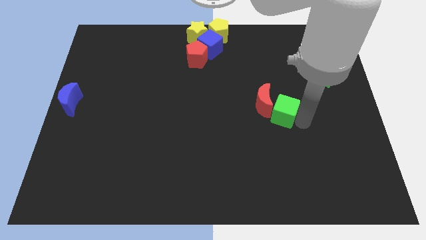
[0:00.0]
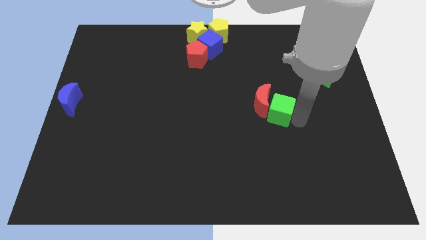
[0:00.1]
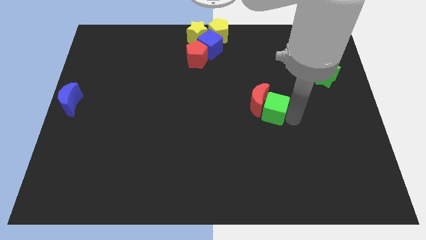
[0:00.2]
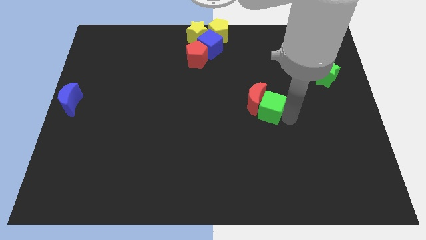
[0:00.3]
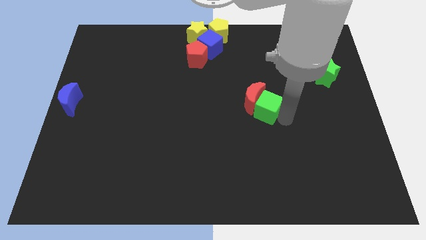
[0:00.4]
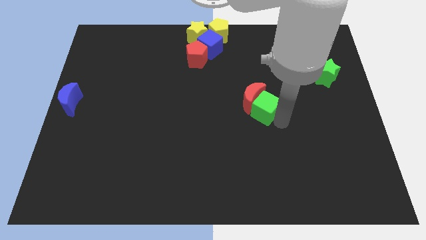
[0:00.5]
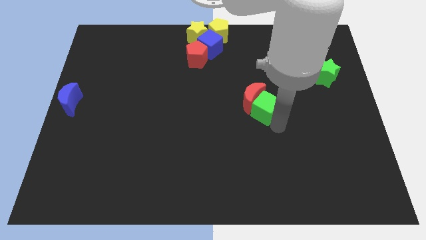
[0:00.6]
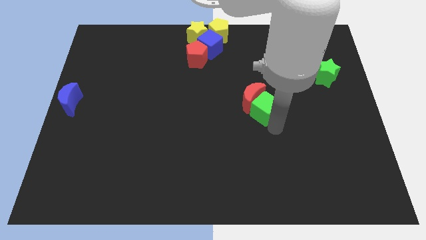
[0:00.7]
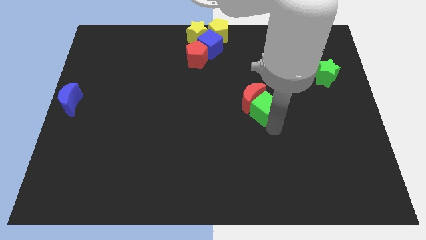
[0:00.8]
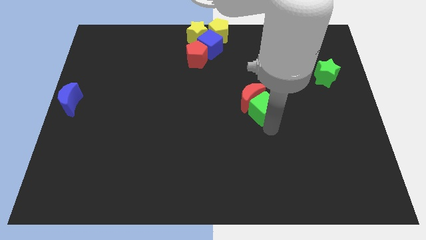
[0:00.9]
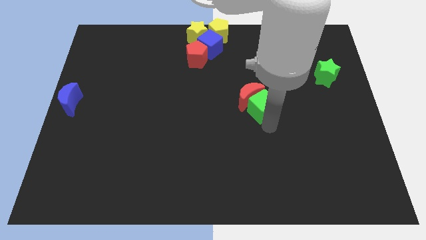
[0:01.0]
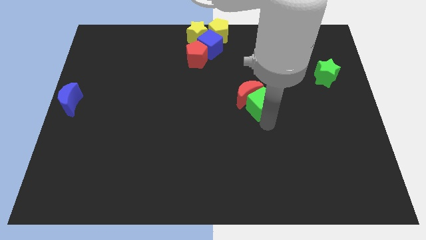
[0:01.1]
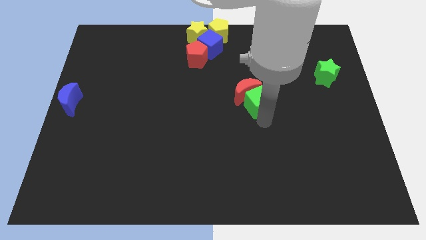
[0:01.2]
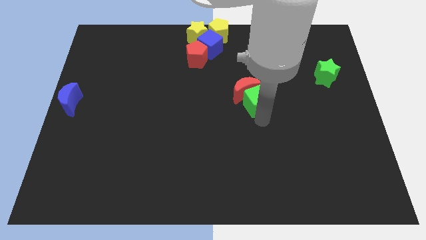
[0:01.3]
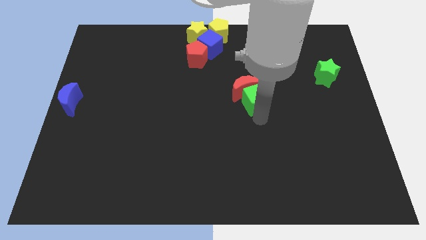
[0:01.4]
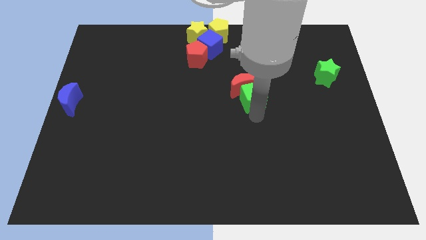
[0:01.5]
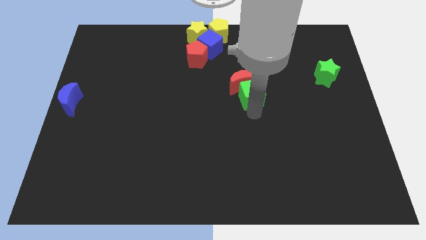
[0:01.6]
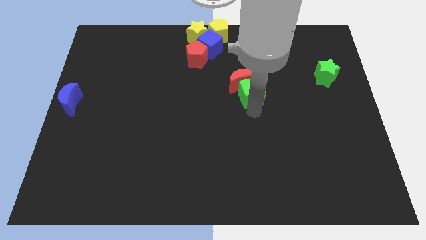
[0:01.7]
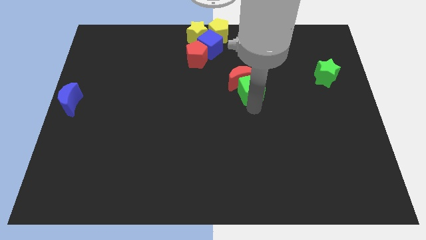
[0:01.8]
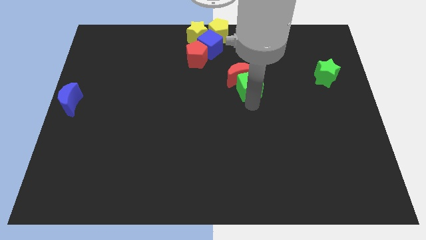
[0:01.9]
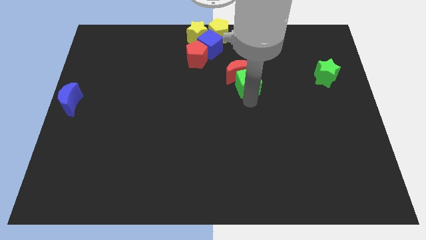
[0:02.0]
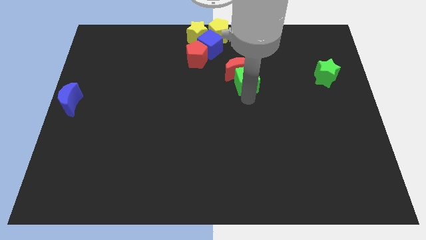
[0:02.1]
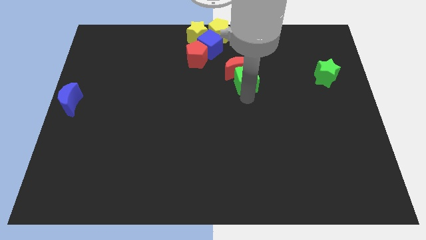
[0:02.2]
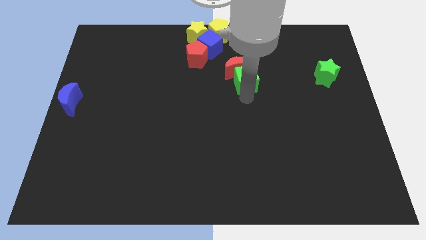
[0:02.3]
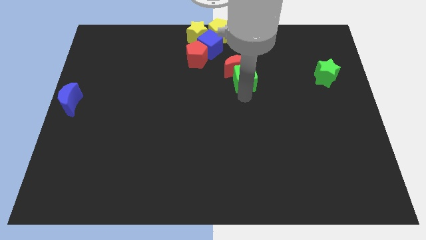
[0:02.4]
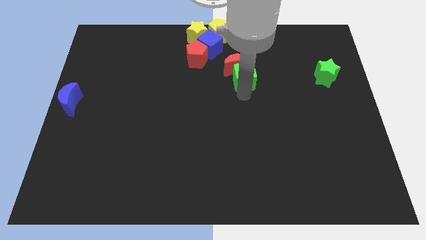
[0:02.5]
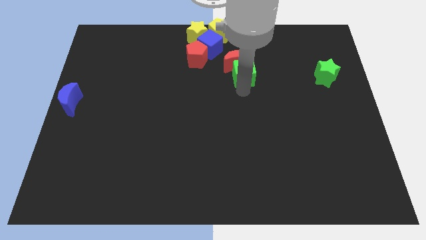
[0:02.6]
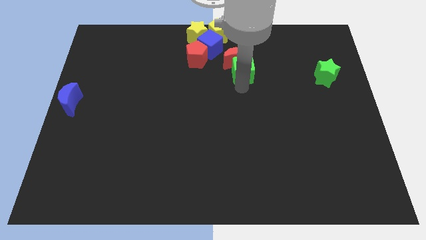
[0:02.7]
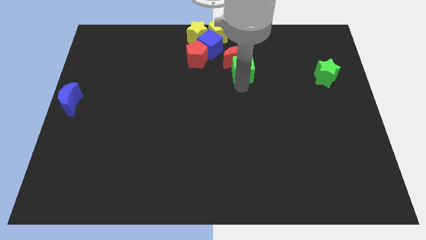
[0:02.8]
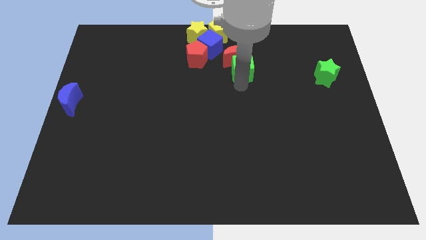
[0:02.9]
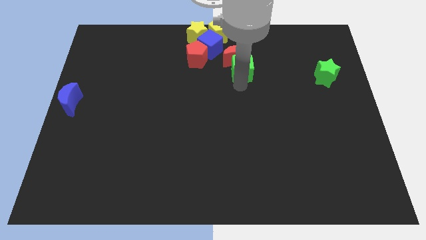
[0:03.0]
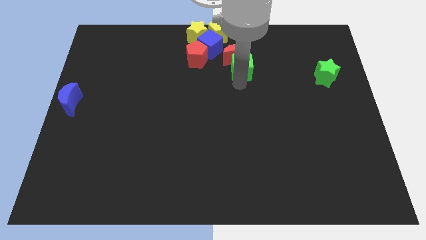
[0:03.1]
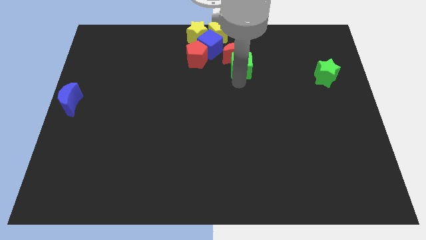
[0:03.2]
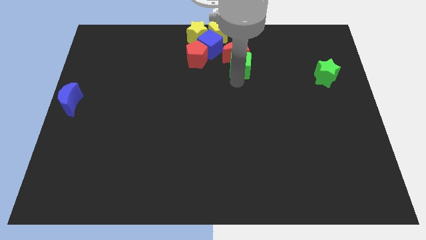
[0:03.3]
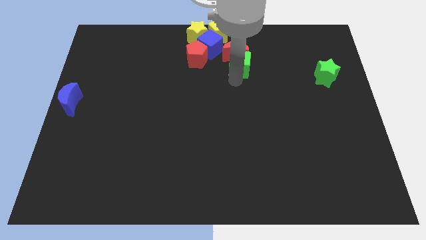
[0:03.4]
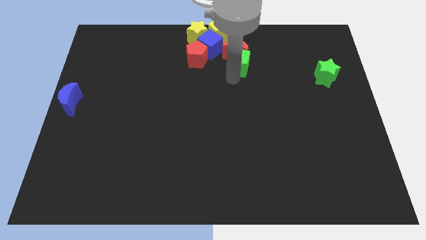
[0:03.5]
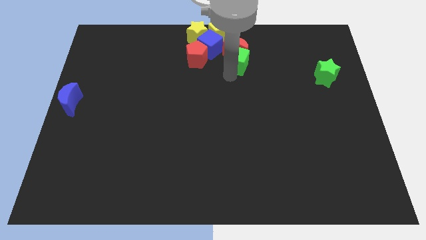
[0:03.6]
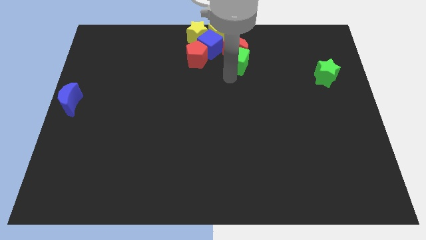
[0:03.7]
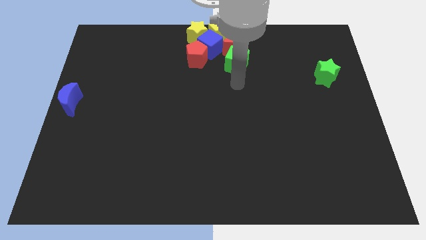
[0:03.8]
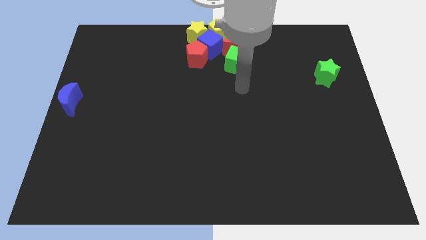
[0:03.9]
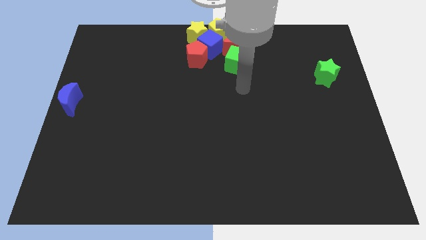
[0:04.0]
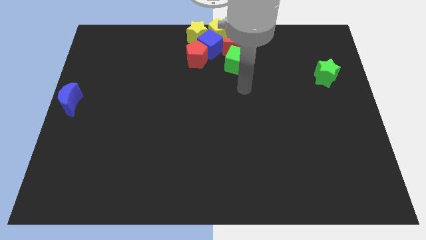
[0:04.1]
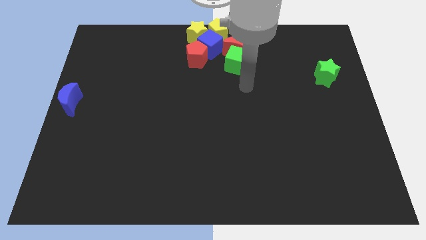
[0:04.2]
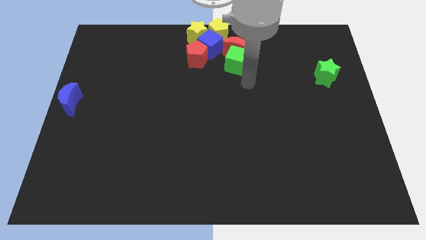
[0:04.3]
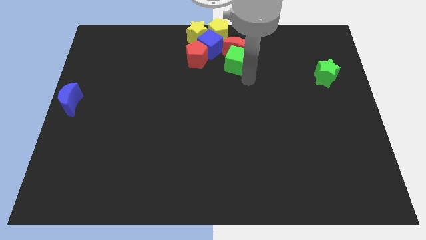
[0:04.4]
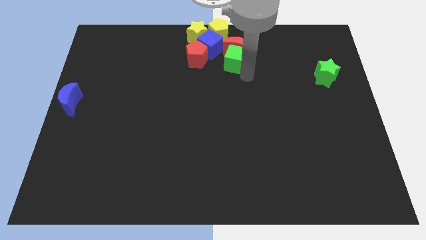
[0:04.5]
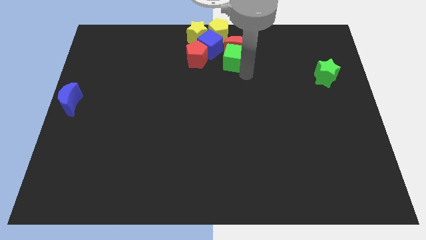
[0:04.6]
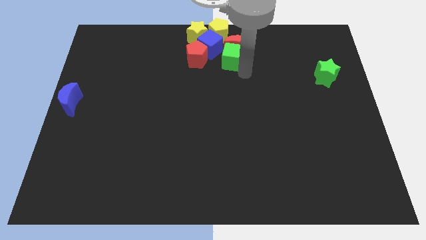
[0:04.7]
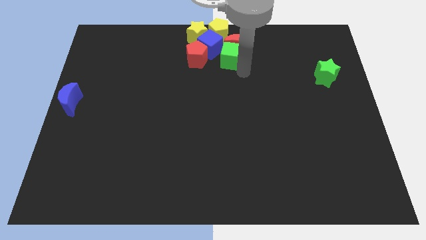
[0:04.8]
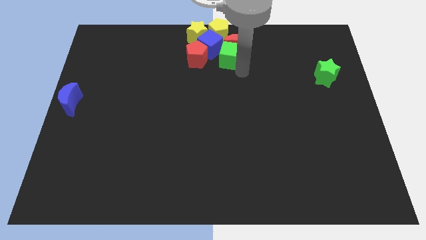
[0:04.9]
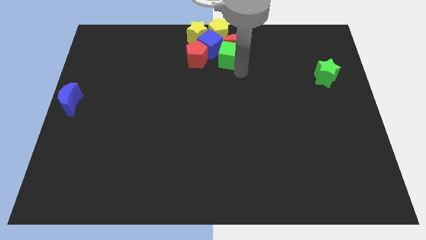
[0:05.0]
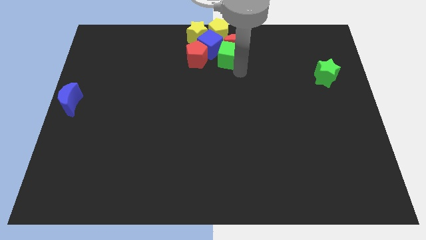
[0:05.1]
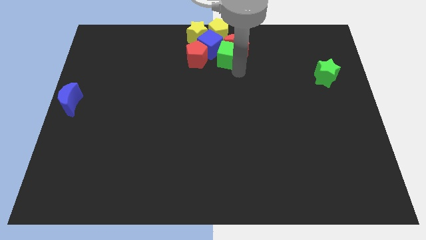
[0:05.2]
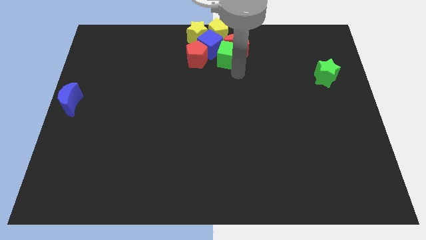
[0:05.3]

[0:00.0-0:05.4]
push the red crescent with the green cube towards the top center of the board

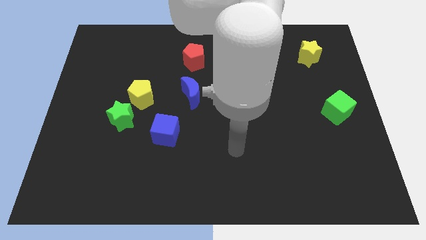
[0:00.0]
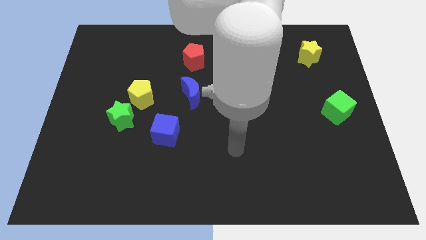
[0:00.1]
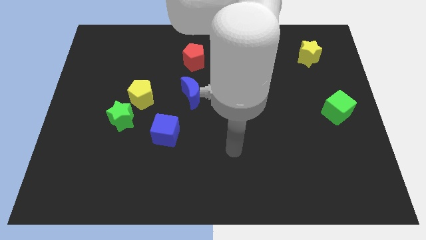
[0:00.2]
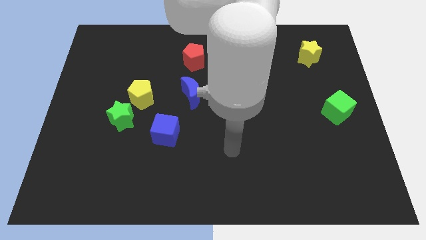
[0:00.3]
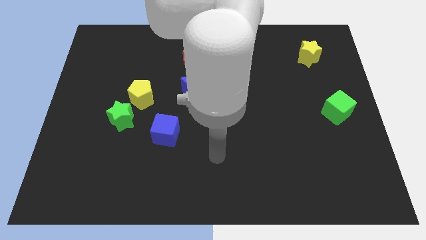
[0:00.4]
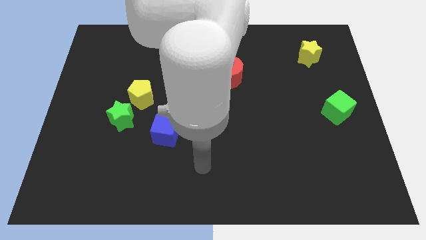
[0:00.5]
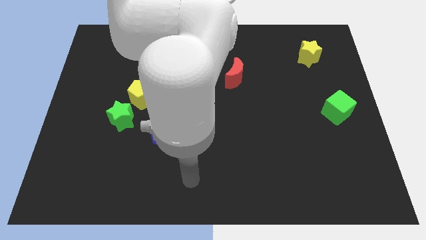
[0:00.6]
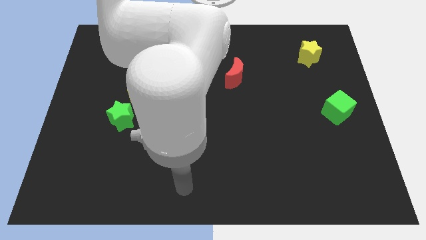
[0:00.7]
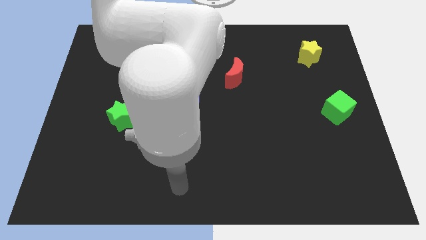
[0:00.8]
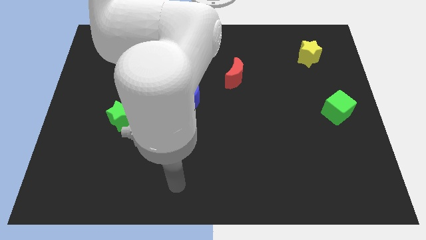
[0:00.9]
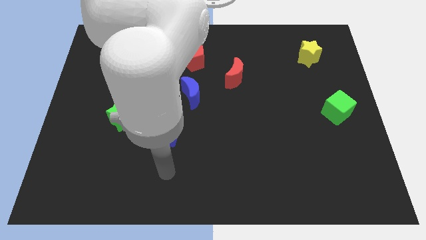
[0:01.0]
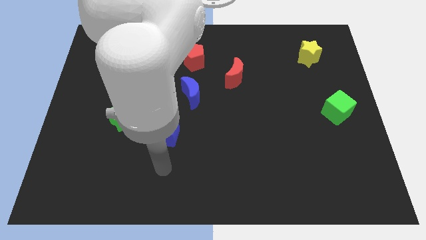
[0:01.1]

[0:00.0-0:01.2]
place your hand under the blue cube

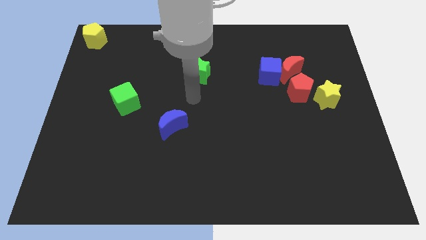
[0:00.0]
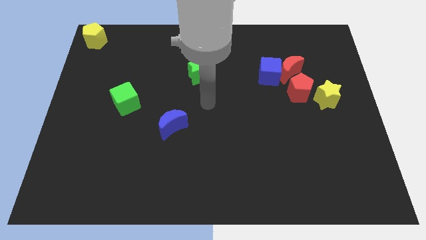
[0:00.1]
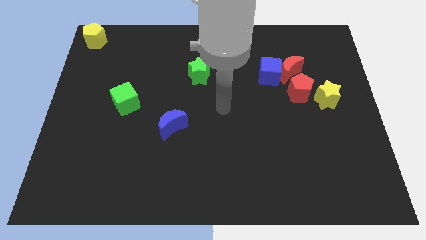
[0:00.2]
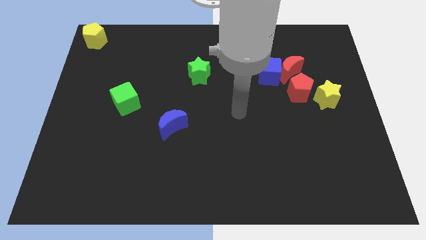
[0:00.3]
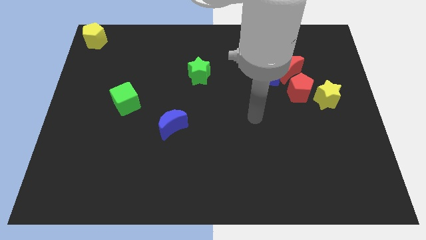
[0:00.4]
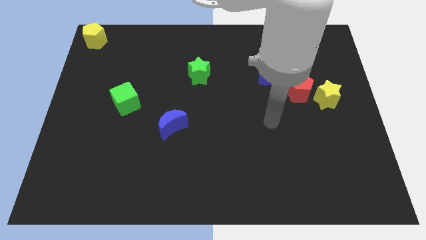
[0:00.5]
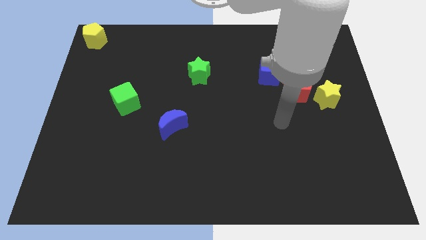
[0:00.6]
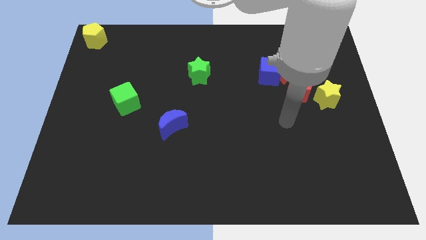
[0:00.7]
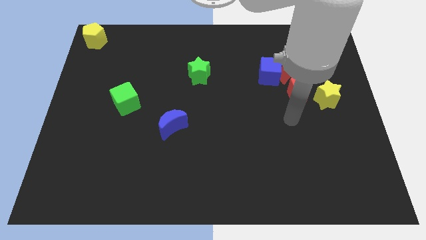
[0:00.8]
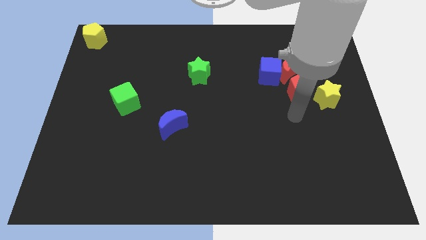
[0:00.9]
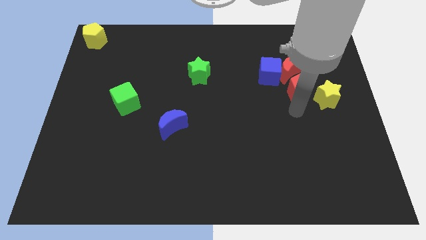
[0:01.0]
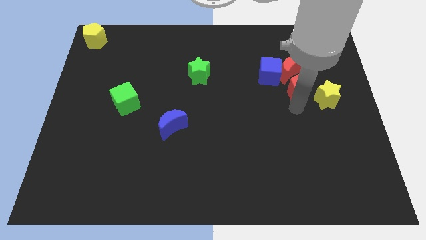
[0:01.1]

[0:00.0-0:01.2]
move your hand to the bottom of the red pentagon

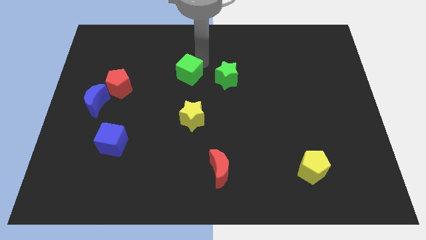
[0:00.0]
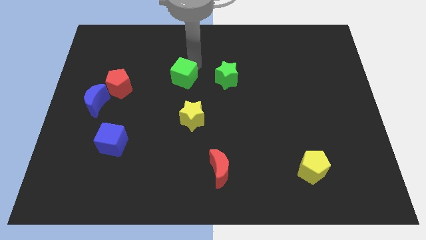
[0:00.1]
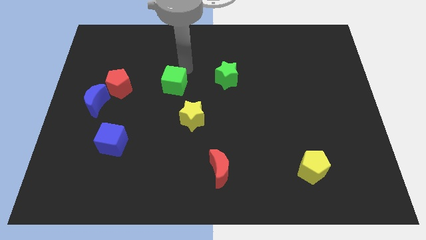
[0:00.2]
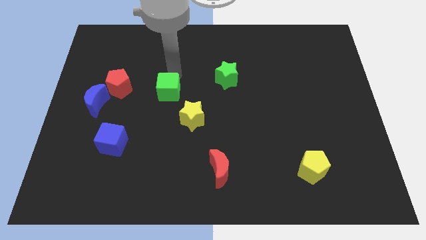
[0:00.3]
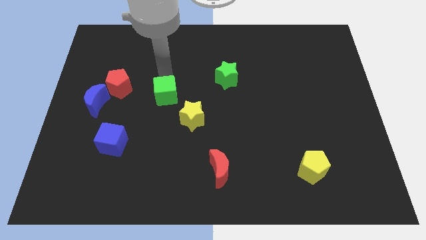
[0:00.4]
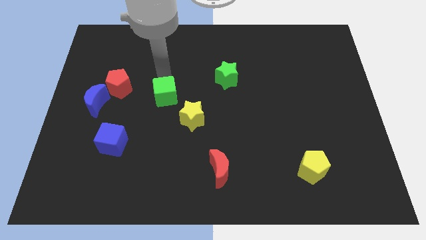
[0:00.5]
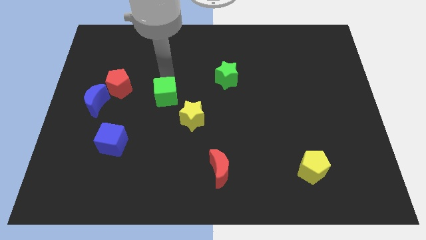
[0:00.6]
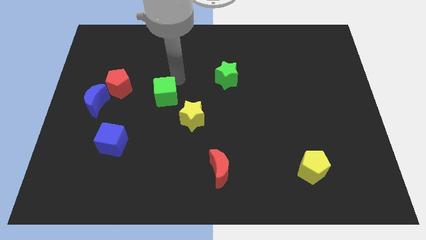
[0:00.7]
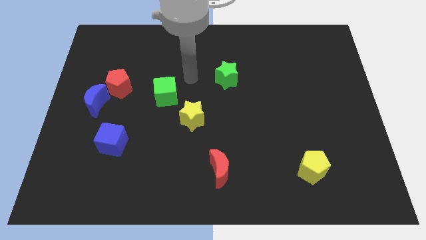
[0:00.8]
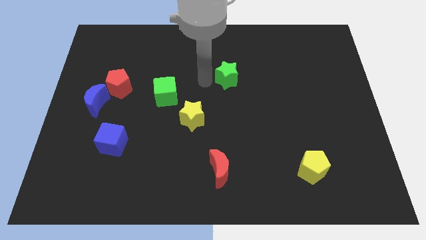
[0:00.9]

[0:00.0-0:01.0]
push green cube downwards

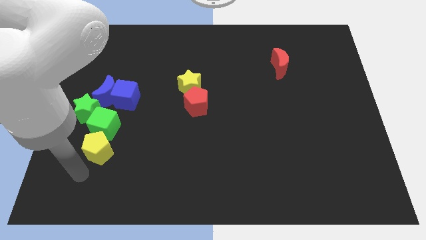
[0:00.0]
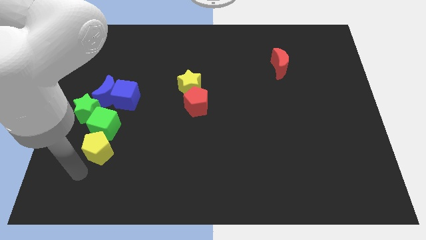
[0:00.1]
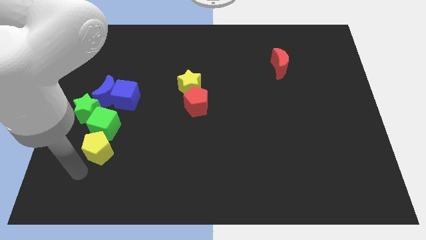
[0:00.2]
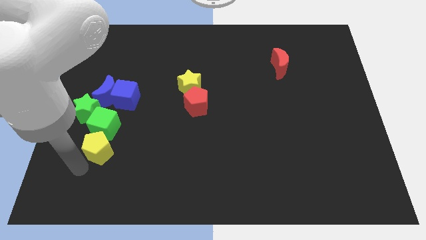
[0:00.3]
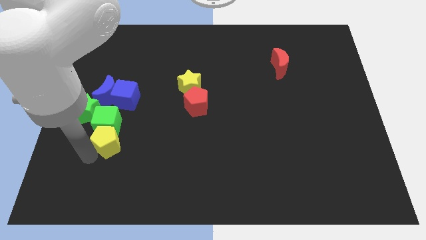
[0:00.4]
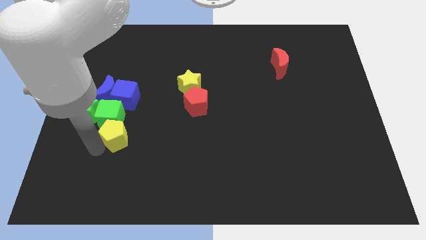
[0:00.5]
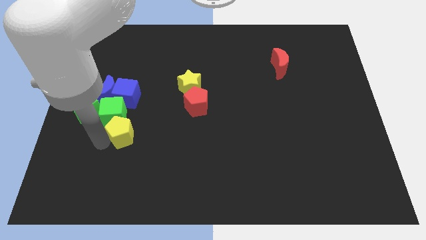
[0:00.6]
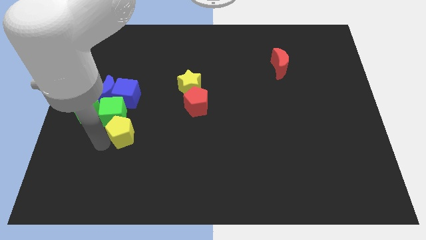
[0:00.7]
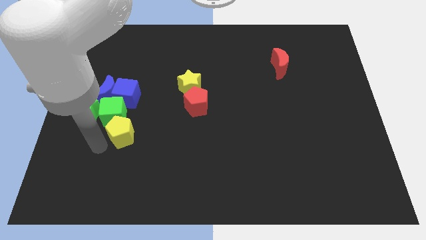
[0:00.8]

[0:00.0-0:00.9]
push yellow pentagon into green cube
